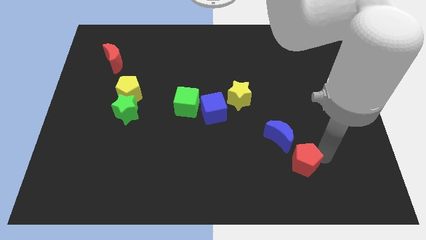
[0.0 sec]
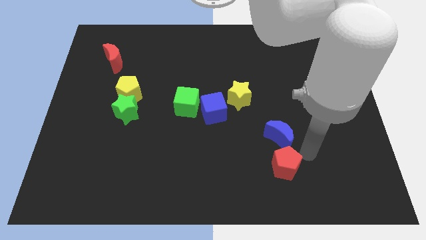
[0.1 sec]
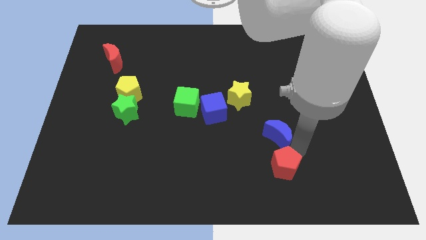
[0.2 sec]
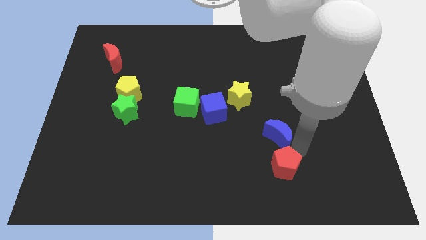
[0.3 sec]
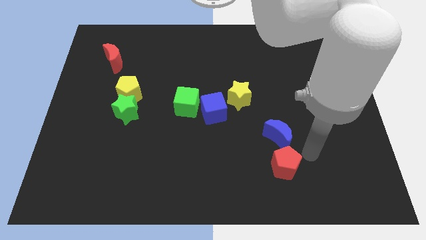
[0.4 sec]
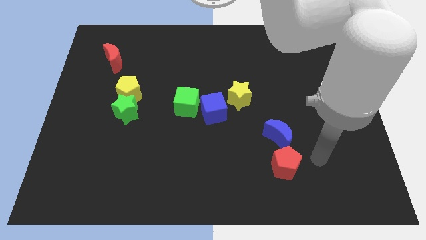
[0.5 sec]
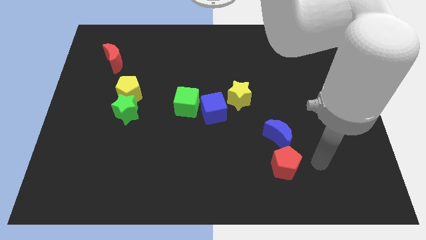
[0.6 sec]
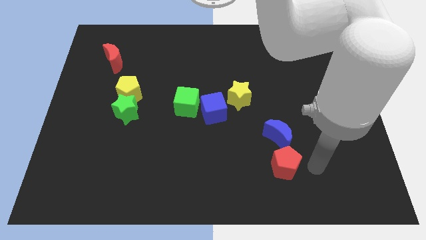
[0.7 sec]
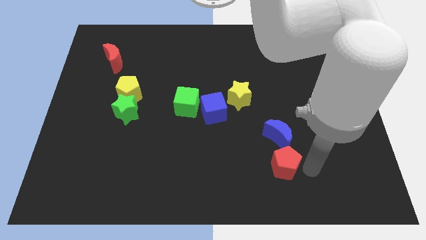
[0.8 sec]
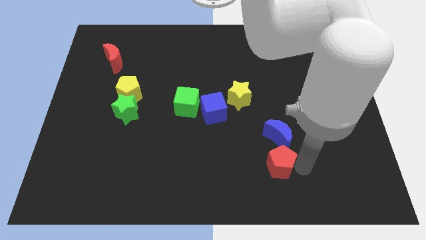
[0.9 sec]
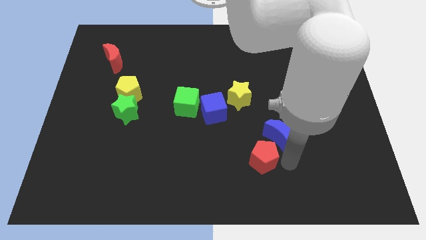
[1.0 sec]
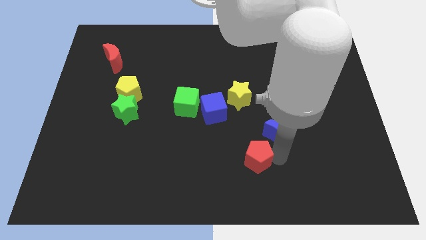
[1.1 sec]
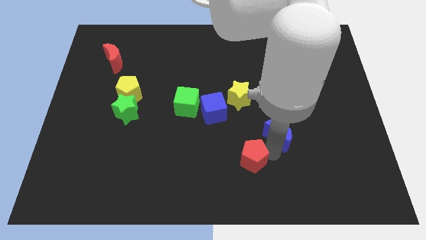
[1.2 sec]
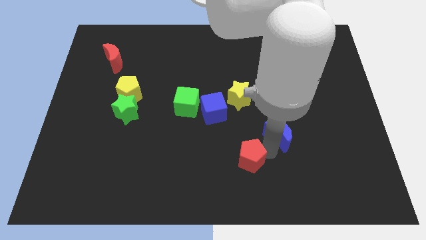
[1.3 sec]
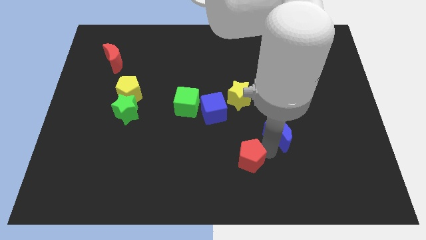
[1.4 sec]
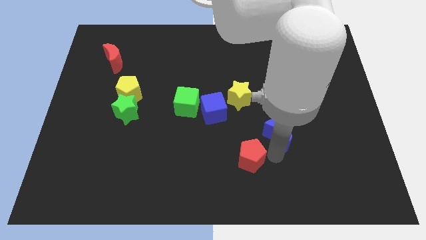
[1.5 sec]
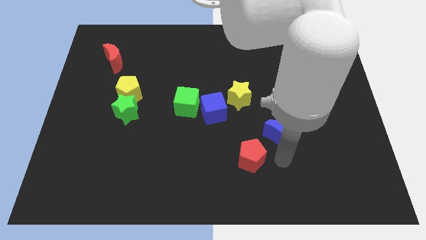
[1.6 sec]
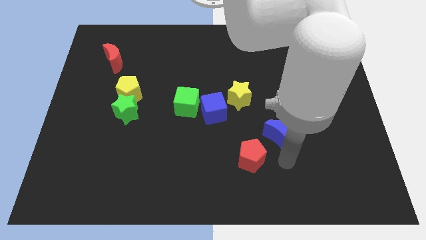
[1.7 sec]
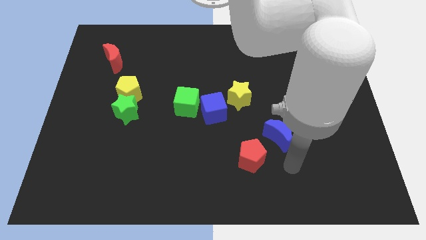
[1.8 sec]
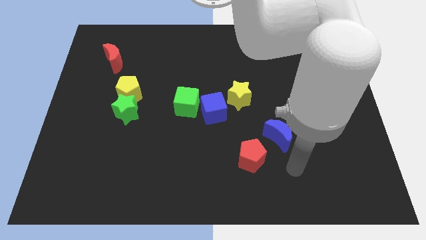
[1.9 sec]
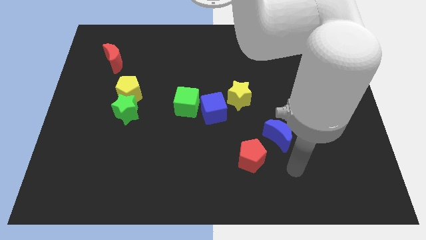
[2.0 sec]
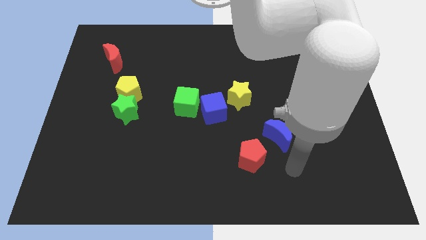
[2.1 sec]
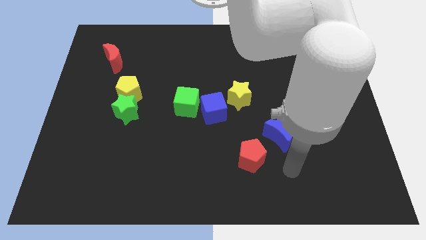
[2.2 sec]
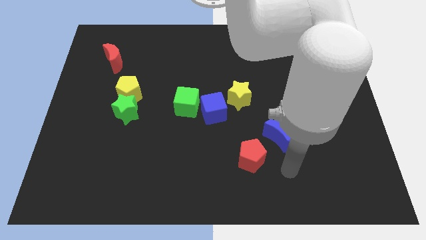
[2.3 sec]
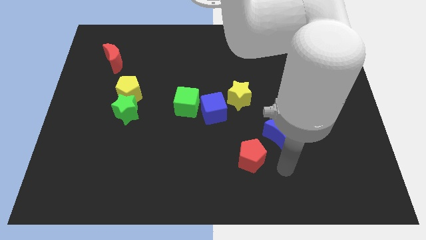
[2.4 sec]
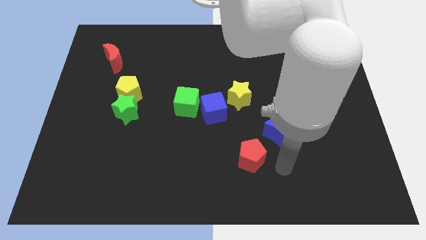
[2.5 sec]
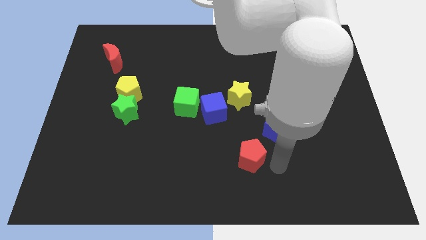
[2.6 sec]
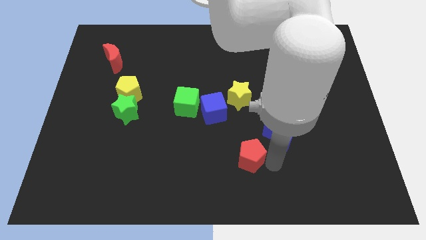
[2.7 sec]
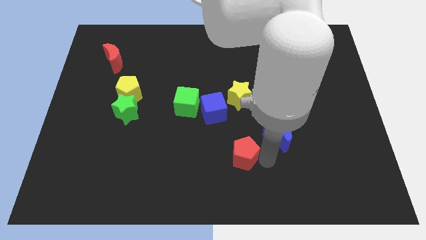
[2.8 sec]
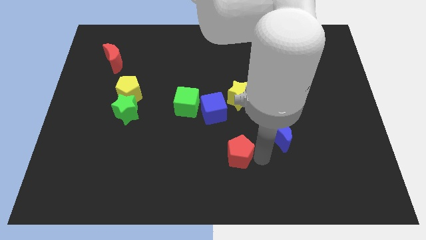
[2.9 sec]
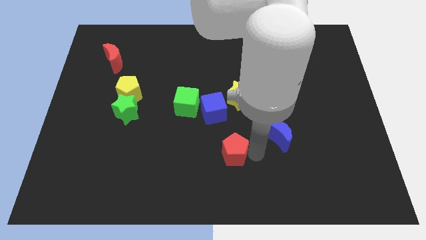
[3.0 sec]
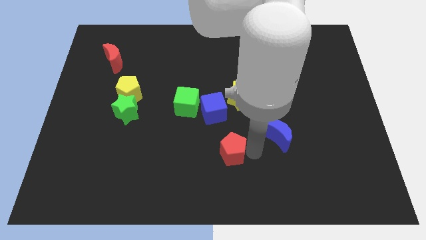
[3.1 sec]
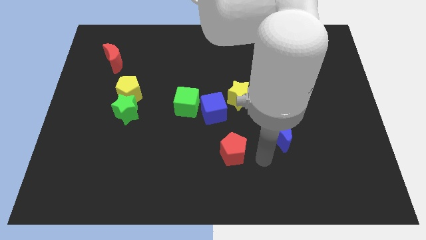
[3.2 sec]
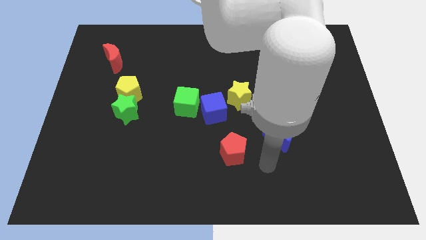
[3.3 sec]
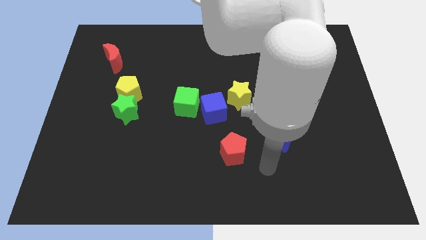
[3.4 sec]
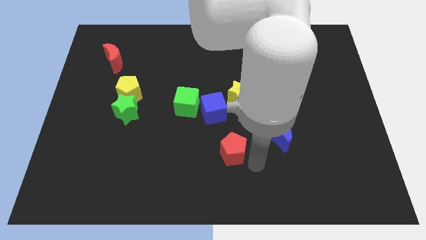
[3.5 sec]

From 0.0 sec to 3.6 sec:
move the red pentagon slightly towards the left side

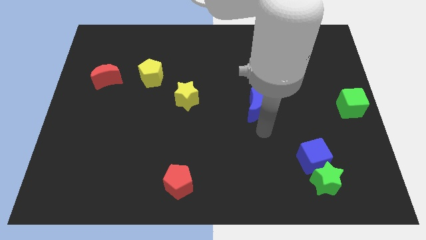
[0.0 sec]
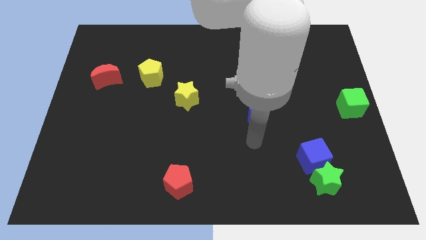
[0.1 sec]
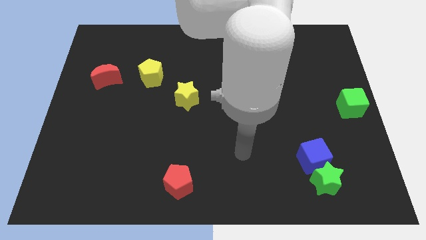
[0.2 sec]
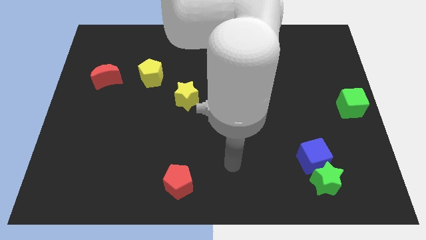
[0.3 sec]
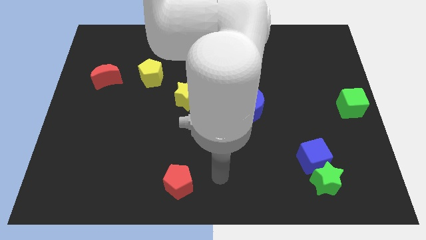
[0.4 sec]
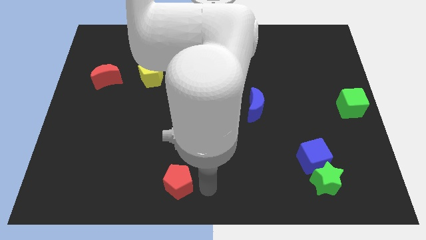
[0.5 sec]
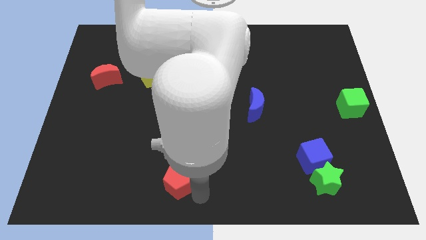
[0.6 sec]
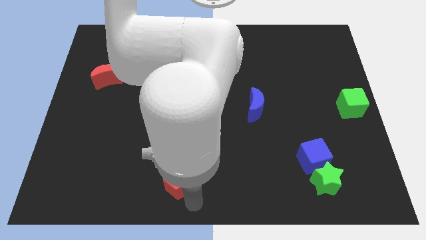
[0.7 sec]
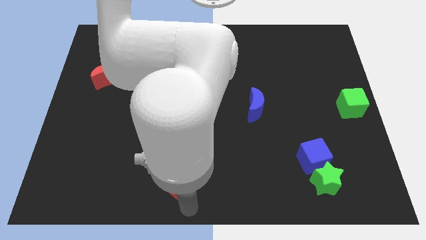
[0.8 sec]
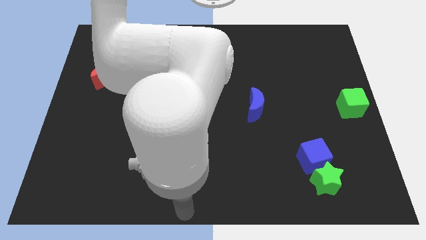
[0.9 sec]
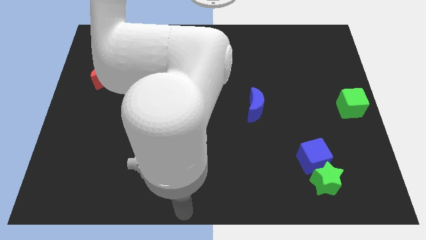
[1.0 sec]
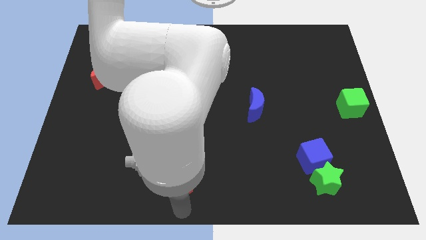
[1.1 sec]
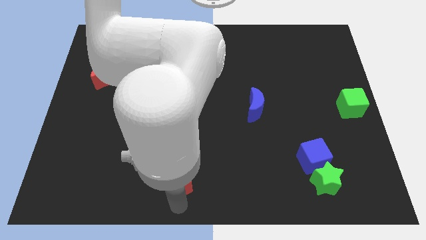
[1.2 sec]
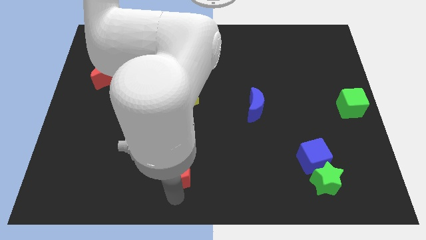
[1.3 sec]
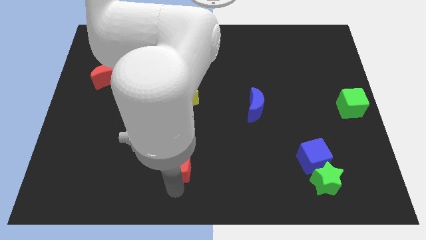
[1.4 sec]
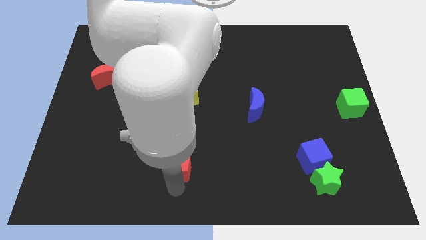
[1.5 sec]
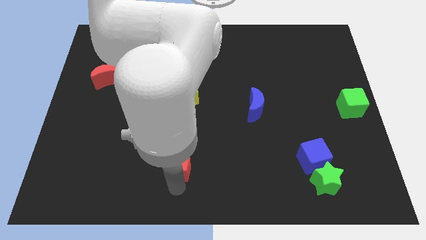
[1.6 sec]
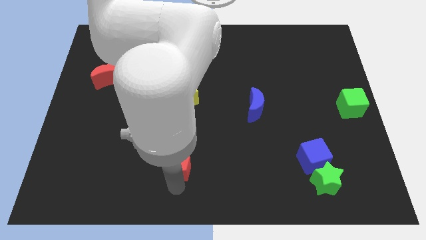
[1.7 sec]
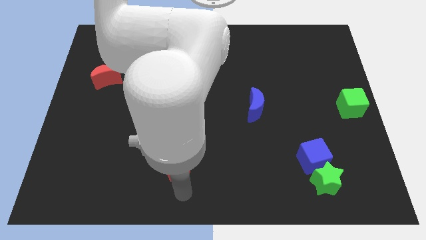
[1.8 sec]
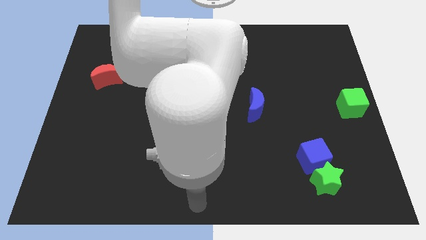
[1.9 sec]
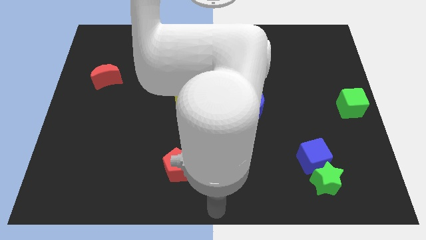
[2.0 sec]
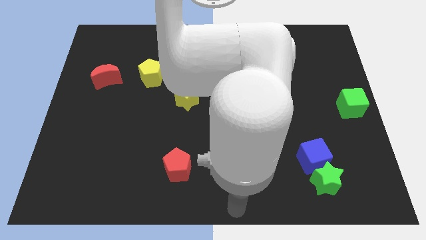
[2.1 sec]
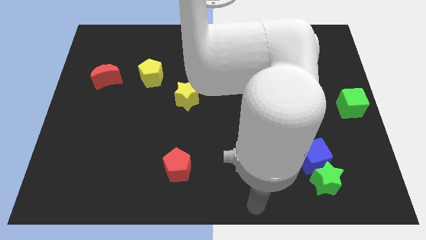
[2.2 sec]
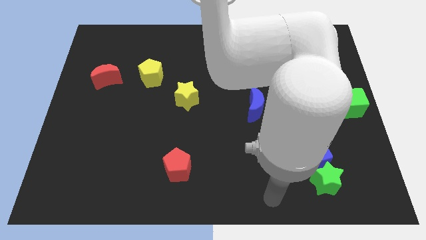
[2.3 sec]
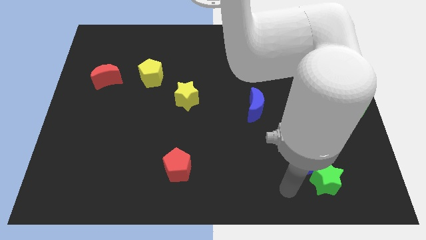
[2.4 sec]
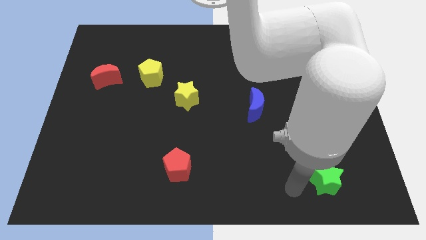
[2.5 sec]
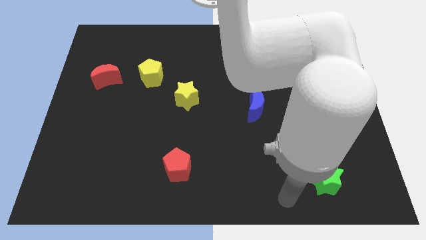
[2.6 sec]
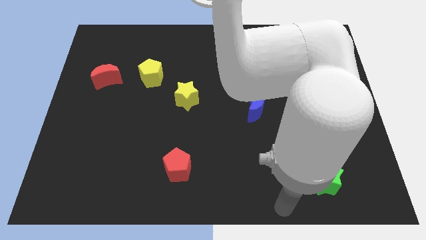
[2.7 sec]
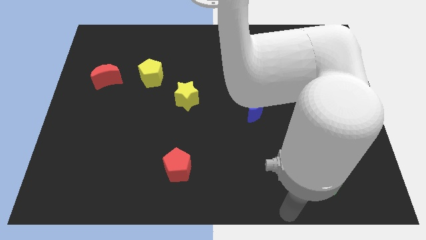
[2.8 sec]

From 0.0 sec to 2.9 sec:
place red pentagon vertically below yellow star

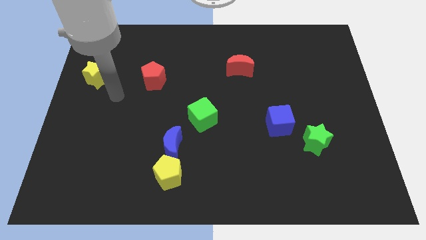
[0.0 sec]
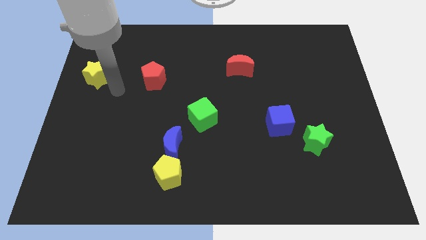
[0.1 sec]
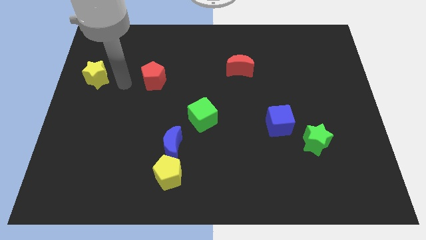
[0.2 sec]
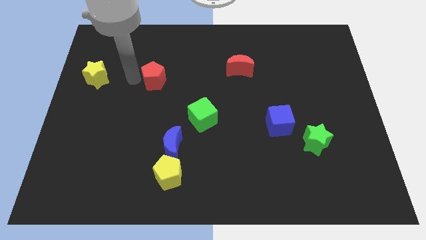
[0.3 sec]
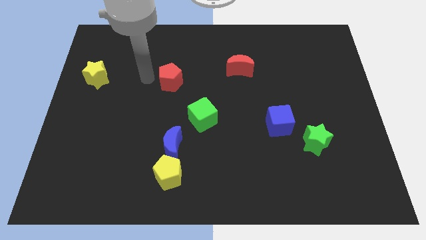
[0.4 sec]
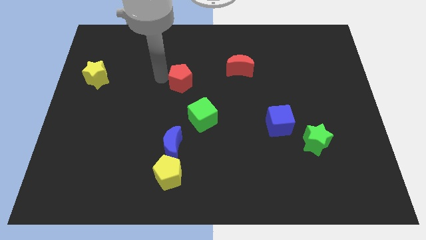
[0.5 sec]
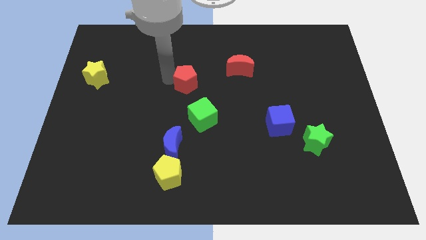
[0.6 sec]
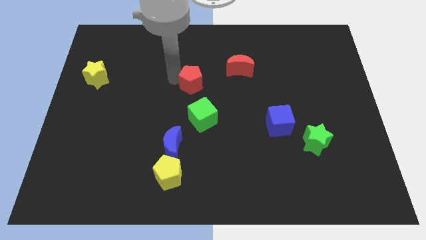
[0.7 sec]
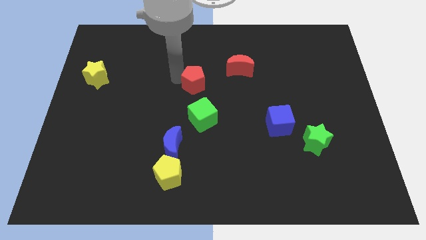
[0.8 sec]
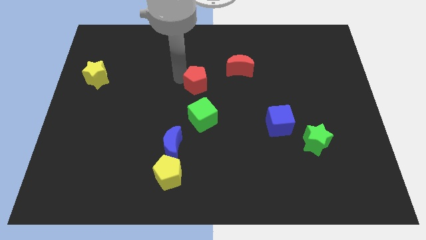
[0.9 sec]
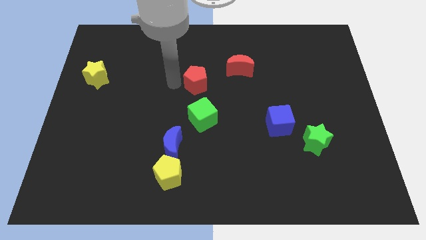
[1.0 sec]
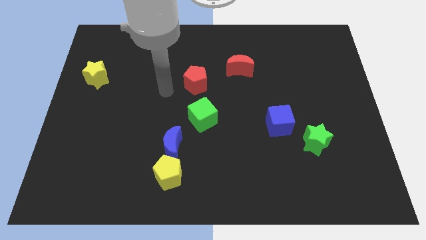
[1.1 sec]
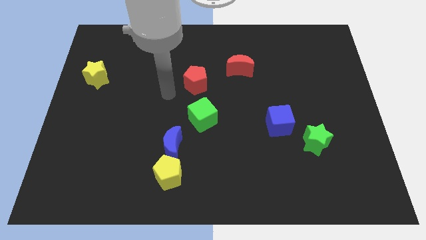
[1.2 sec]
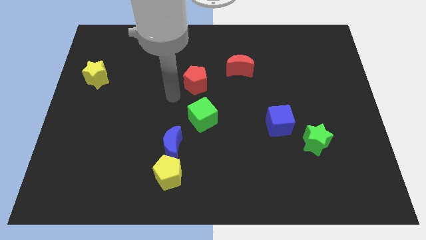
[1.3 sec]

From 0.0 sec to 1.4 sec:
move the red pentagon towards the center of the center of the board

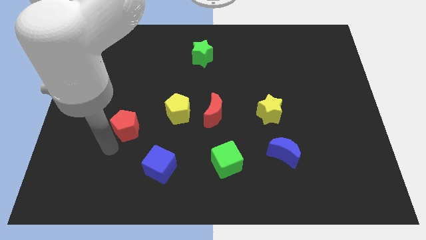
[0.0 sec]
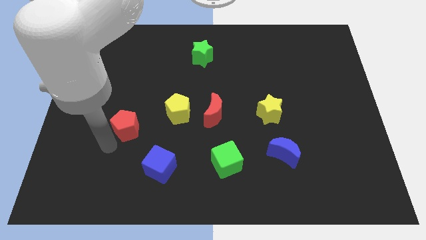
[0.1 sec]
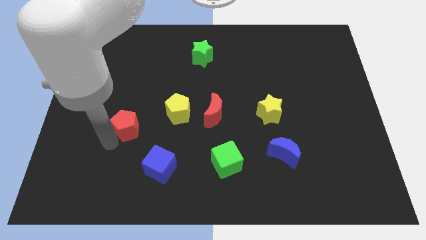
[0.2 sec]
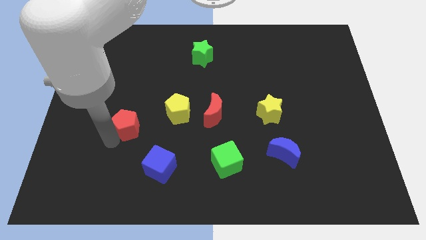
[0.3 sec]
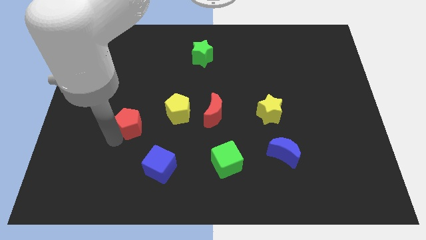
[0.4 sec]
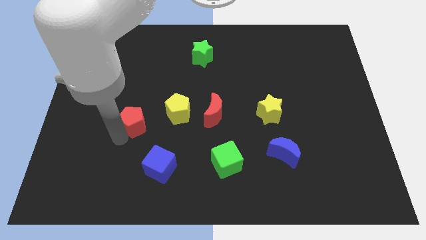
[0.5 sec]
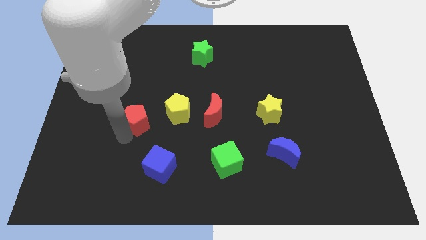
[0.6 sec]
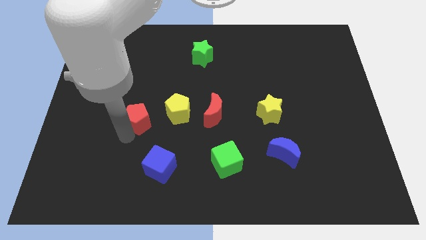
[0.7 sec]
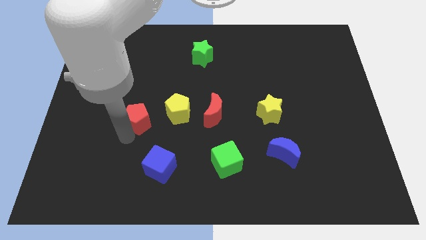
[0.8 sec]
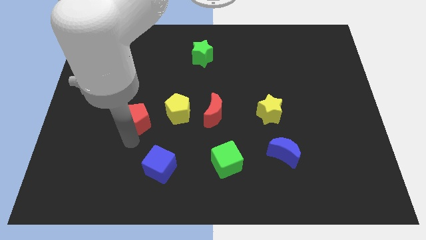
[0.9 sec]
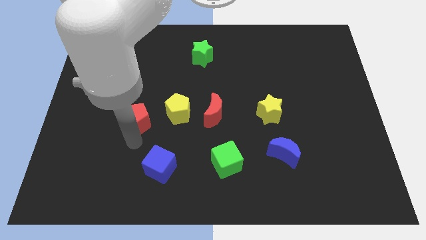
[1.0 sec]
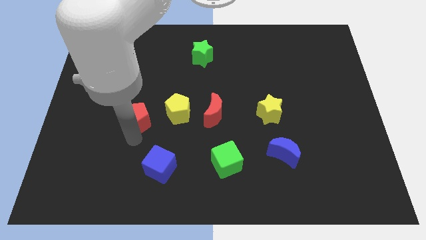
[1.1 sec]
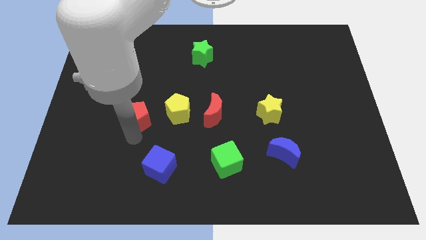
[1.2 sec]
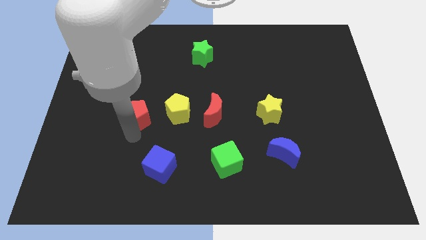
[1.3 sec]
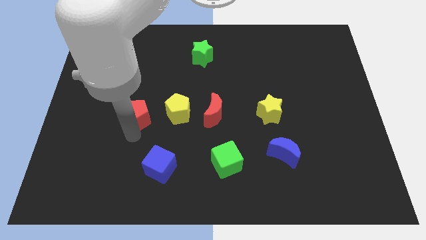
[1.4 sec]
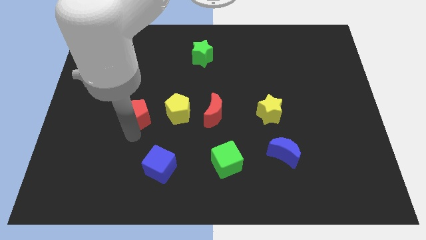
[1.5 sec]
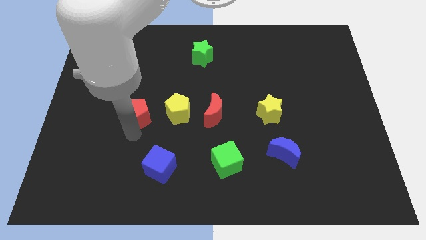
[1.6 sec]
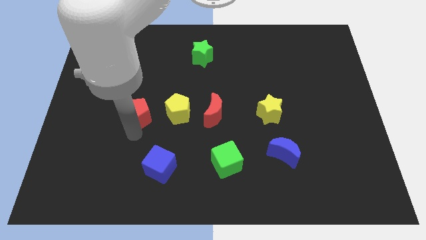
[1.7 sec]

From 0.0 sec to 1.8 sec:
put the red pentagon to the left of the yellow pentagon
